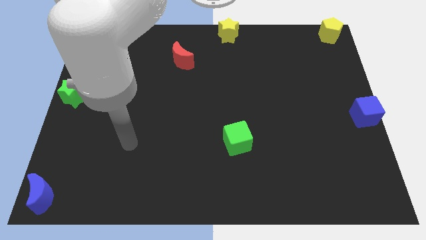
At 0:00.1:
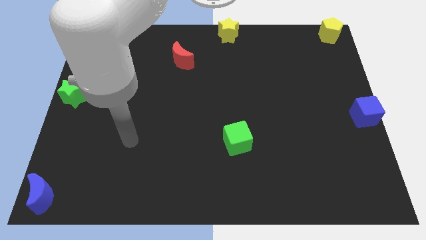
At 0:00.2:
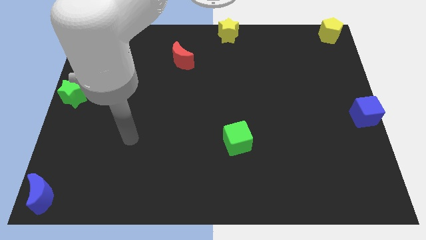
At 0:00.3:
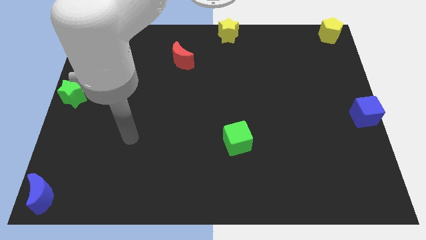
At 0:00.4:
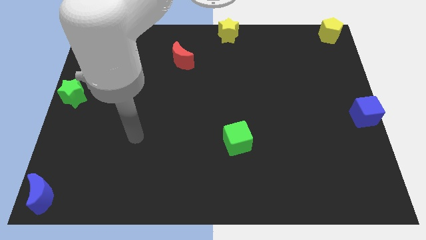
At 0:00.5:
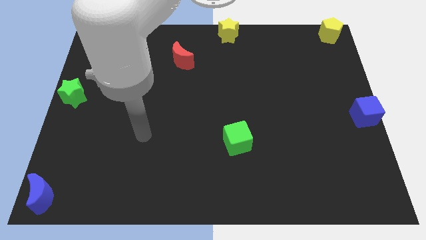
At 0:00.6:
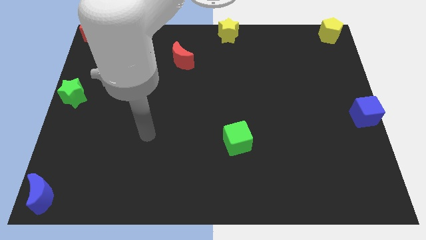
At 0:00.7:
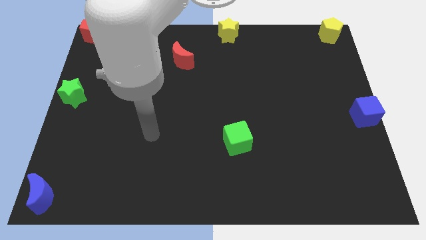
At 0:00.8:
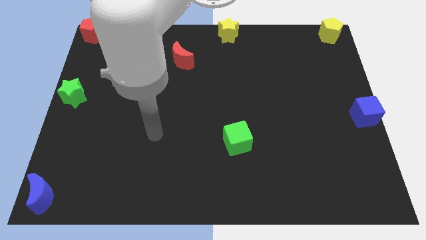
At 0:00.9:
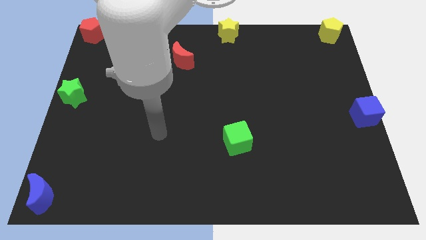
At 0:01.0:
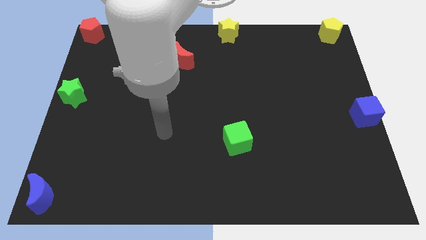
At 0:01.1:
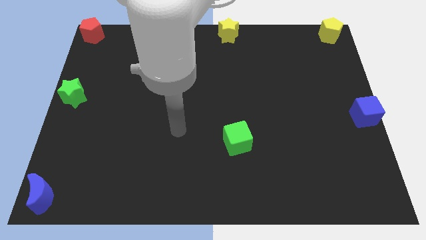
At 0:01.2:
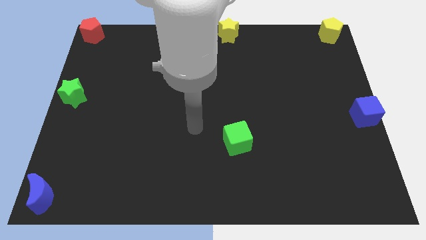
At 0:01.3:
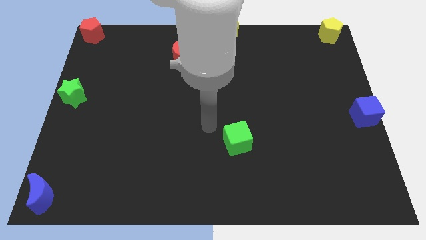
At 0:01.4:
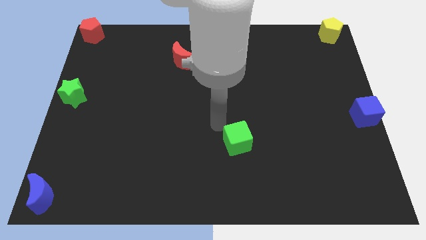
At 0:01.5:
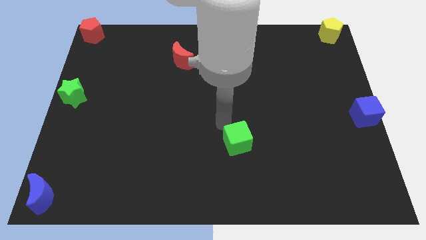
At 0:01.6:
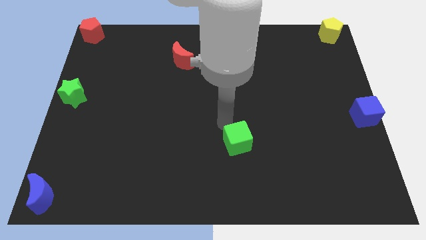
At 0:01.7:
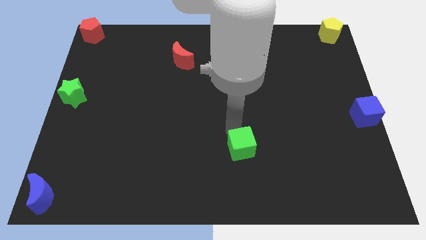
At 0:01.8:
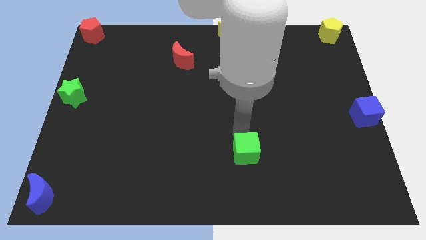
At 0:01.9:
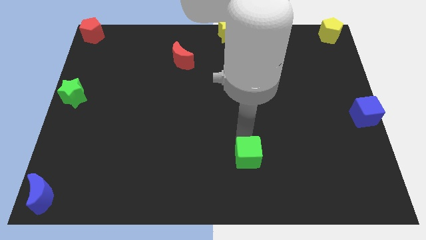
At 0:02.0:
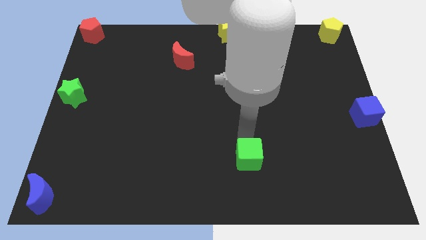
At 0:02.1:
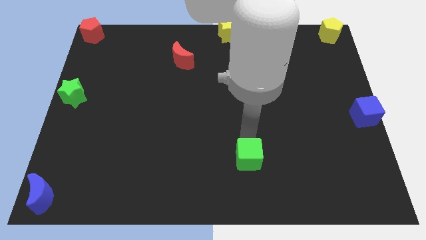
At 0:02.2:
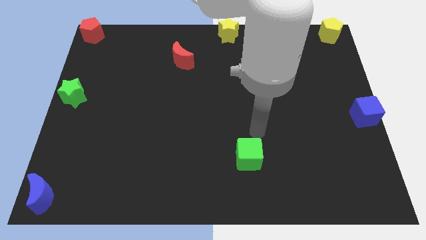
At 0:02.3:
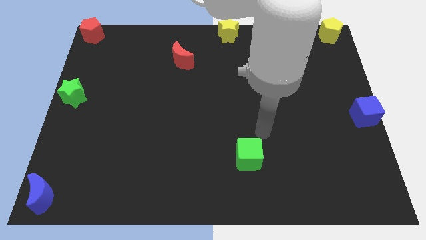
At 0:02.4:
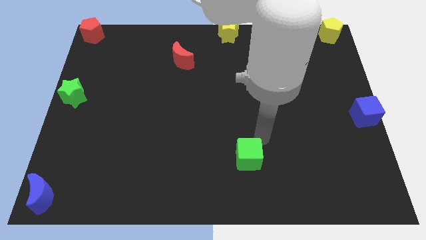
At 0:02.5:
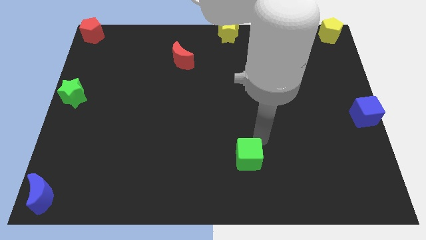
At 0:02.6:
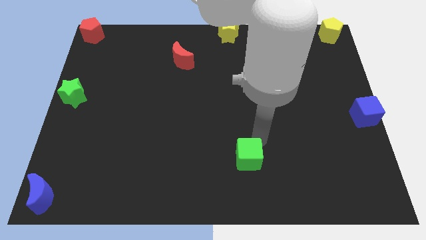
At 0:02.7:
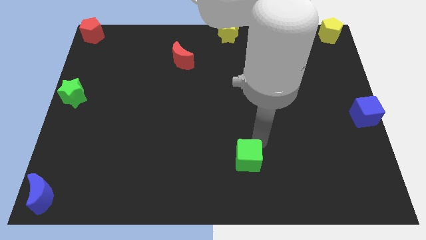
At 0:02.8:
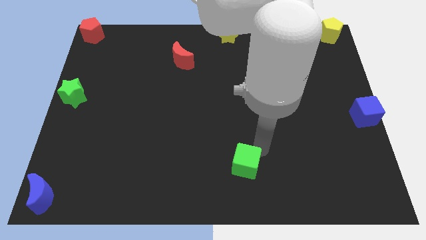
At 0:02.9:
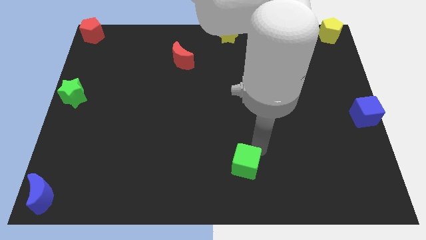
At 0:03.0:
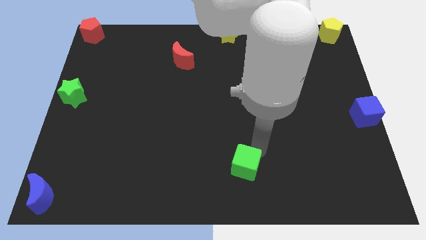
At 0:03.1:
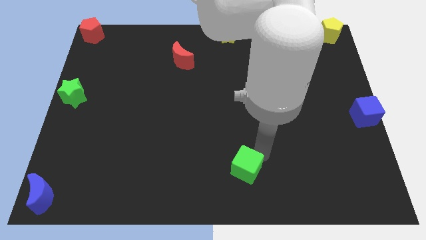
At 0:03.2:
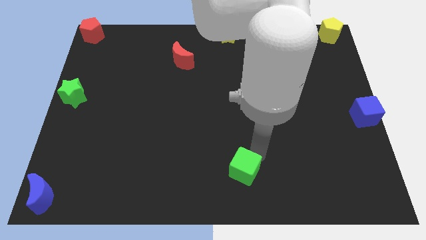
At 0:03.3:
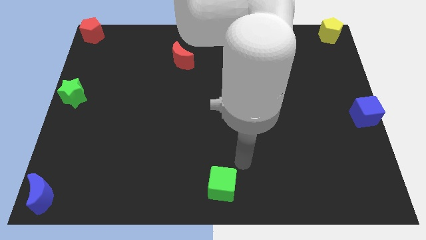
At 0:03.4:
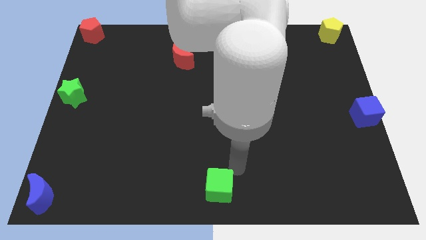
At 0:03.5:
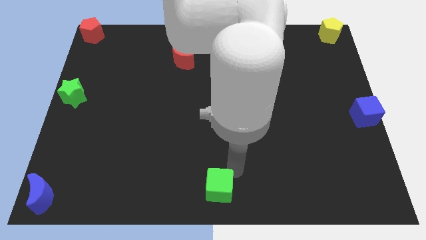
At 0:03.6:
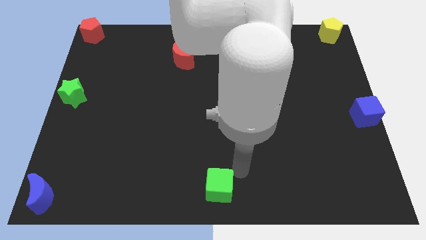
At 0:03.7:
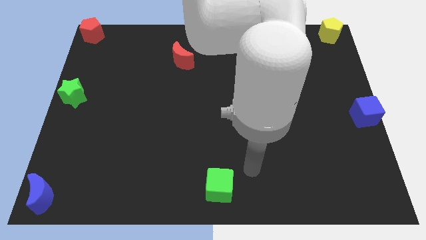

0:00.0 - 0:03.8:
move the green cube towards the bottom center of the board

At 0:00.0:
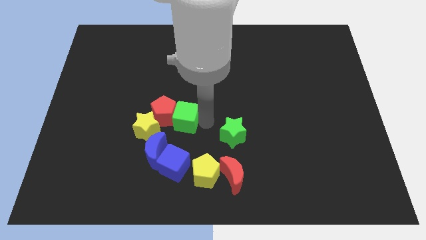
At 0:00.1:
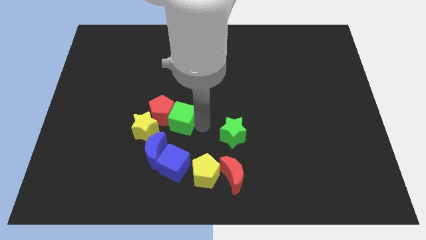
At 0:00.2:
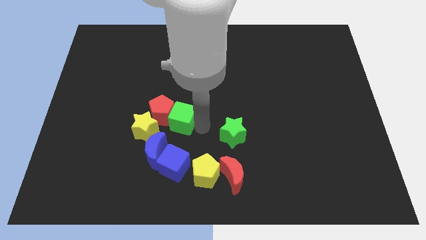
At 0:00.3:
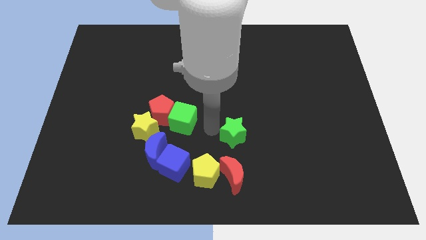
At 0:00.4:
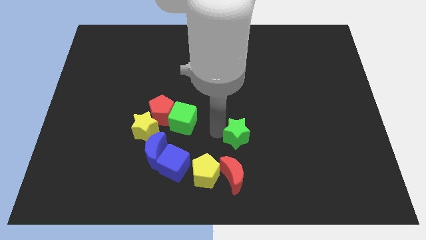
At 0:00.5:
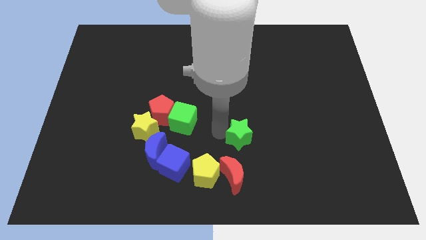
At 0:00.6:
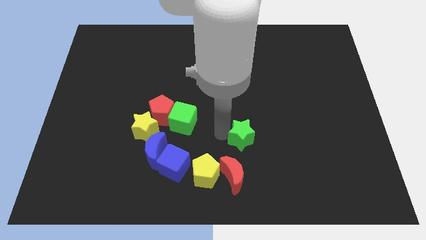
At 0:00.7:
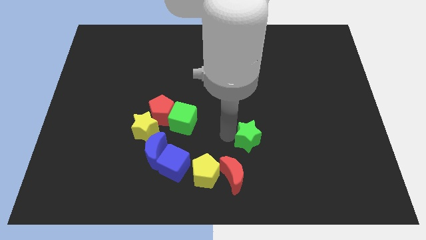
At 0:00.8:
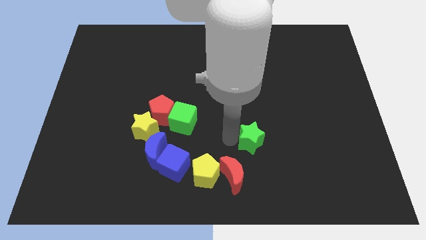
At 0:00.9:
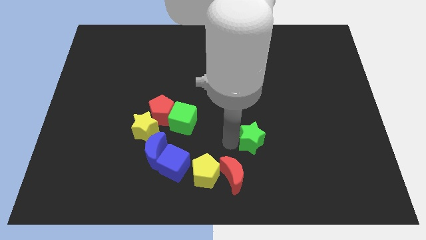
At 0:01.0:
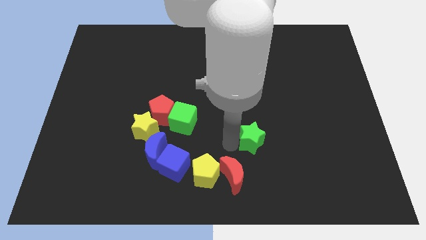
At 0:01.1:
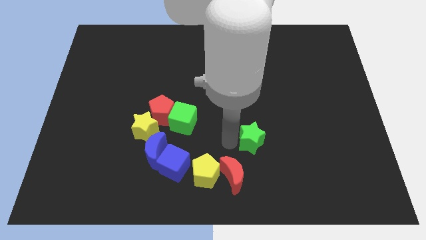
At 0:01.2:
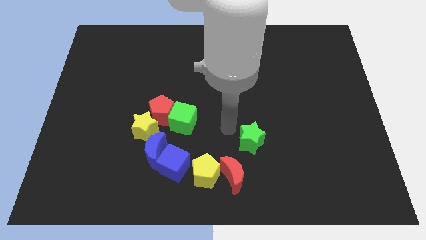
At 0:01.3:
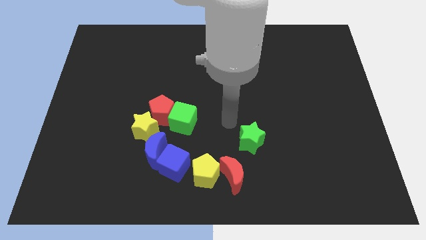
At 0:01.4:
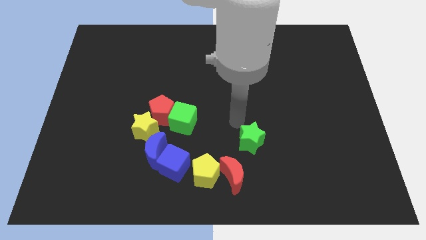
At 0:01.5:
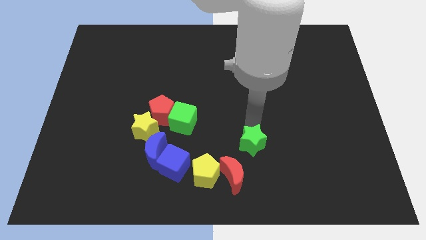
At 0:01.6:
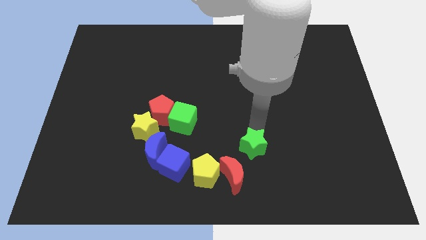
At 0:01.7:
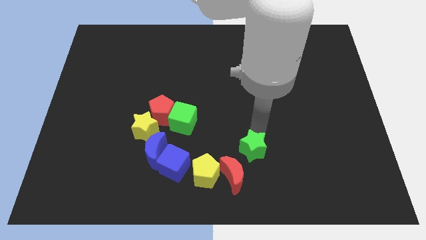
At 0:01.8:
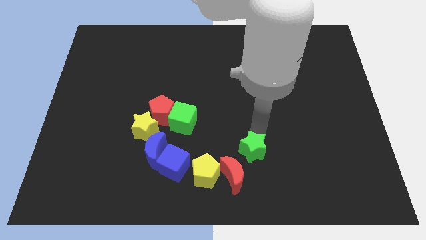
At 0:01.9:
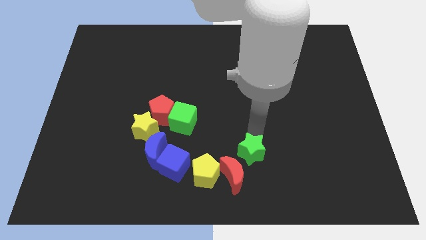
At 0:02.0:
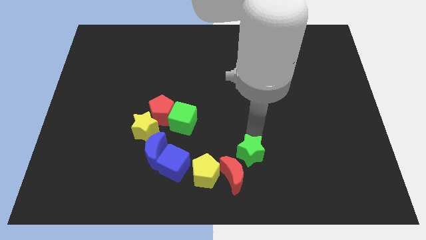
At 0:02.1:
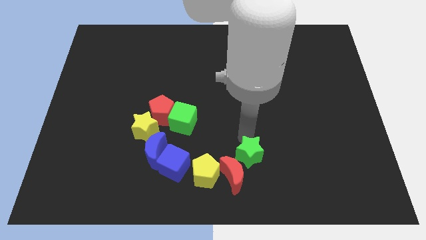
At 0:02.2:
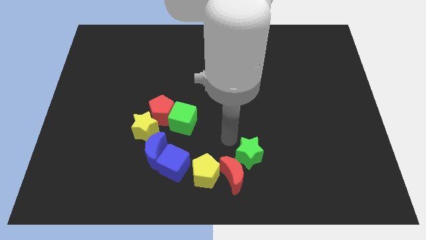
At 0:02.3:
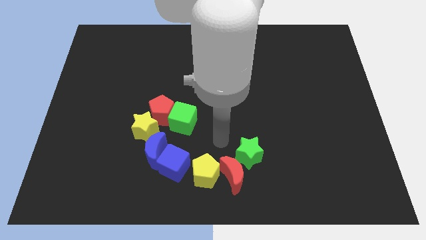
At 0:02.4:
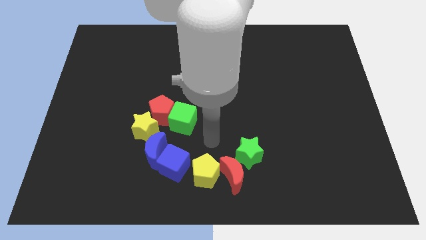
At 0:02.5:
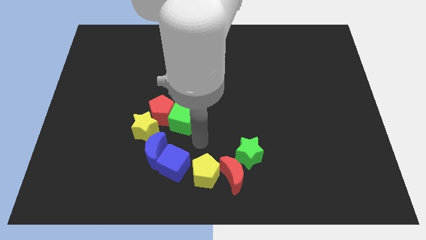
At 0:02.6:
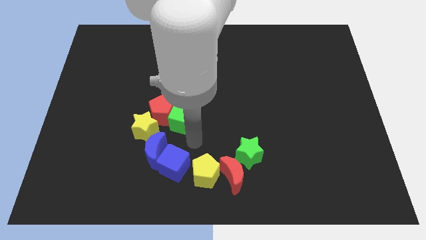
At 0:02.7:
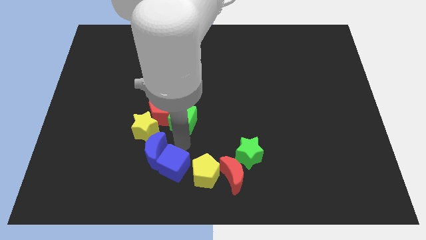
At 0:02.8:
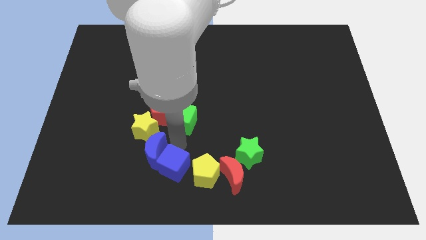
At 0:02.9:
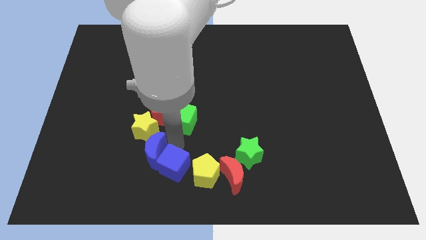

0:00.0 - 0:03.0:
put the green star at the top right side of the red crescent

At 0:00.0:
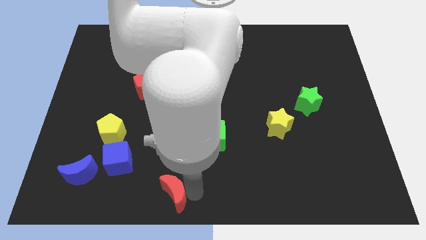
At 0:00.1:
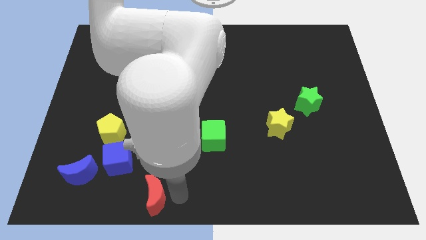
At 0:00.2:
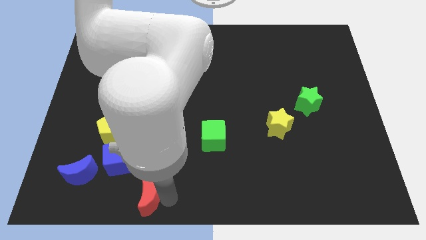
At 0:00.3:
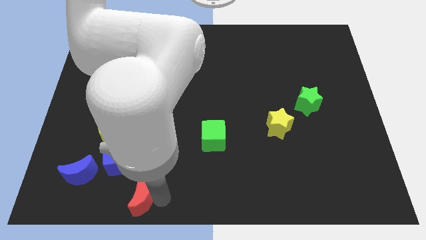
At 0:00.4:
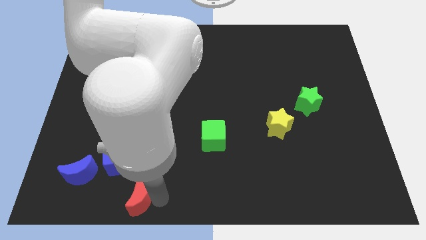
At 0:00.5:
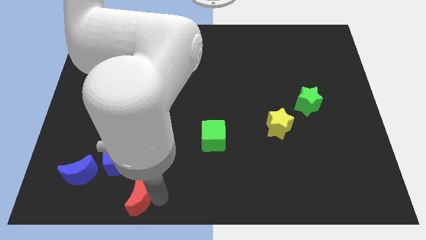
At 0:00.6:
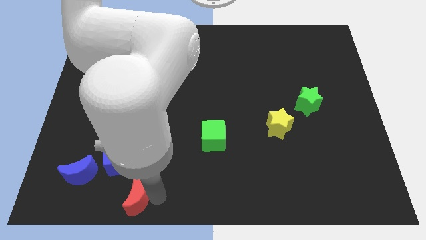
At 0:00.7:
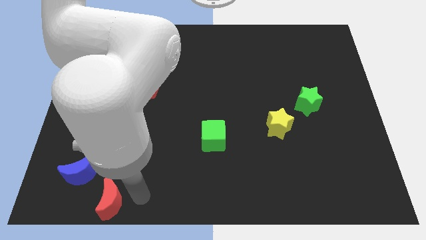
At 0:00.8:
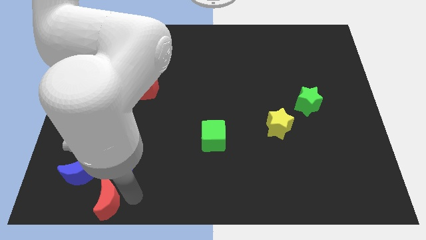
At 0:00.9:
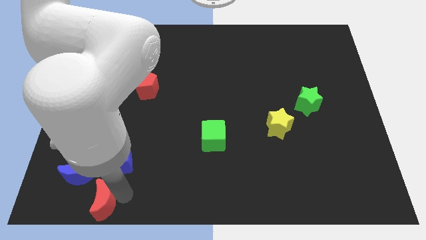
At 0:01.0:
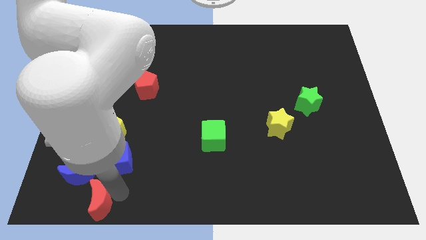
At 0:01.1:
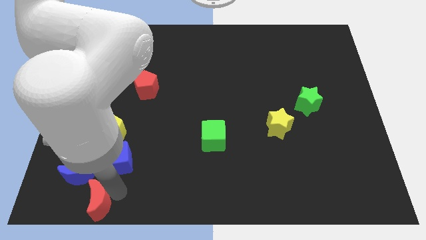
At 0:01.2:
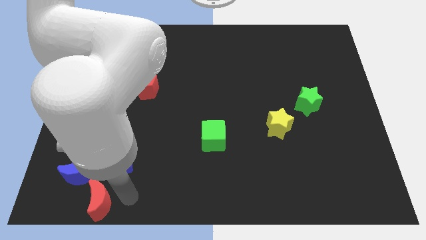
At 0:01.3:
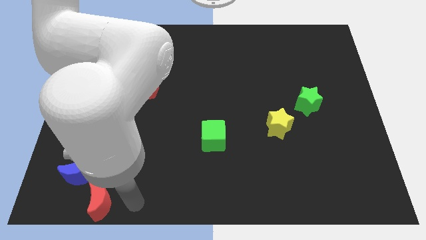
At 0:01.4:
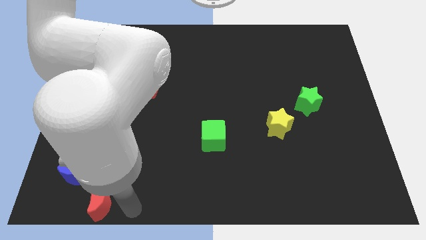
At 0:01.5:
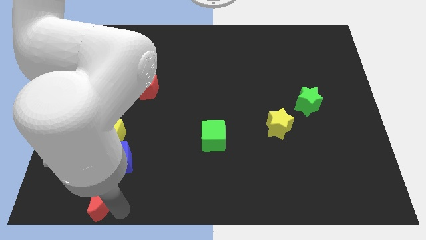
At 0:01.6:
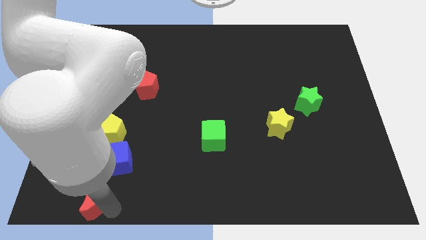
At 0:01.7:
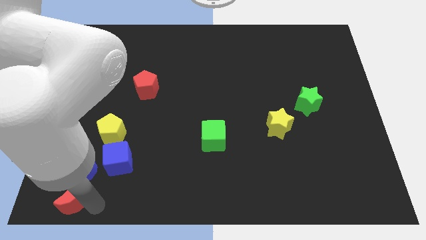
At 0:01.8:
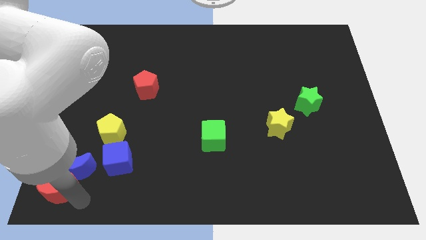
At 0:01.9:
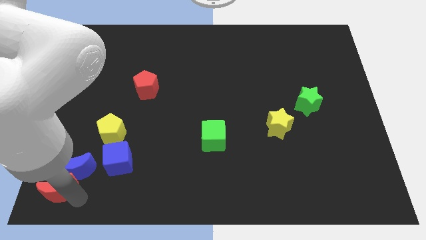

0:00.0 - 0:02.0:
make the red crescent to touch the bottom side of the blue crescent

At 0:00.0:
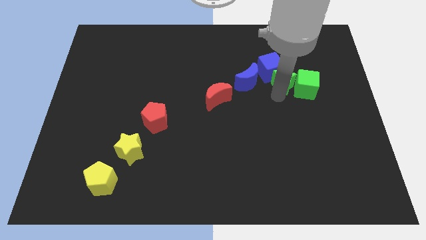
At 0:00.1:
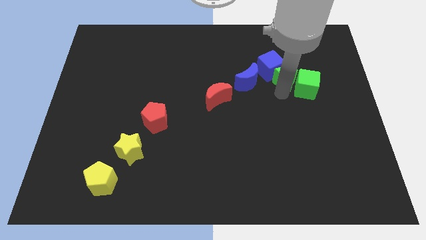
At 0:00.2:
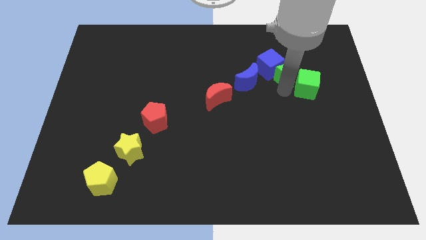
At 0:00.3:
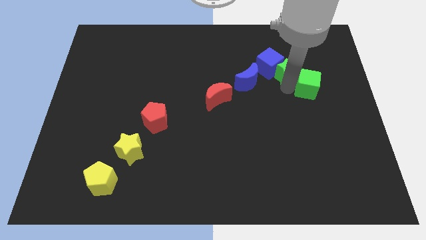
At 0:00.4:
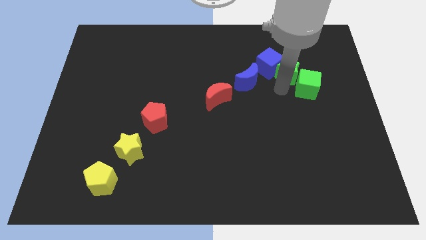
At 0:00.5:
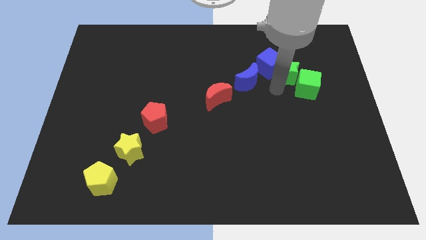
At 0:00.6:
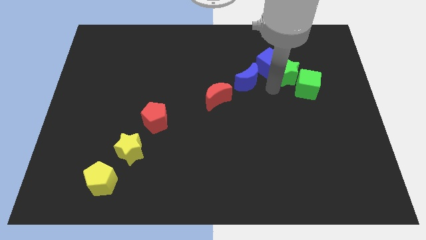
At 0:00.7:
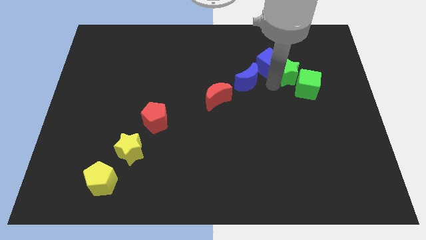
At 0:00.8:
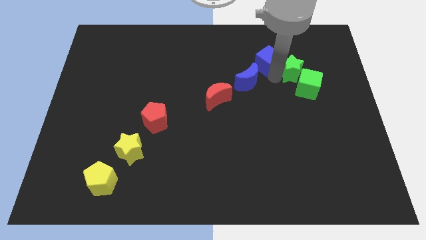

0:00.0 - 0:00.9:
push green star beside blue cube
